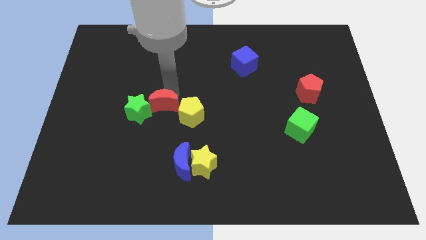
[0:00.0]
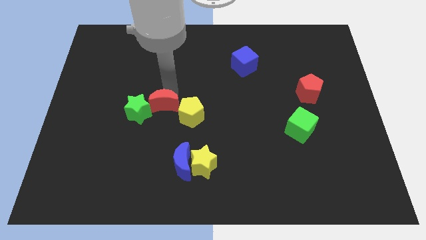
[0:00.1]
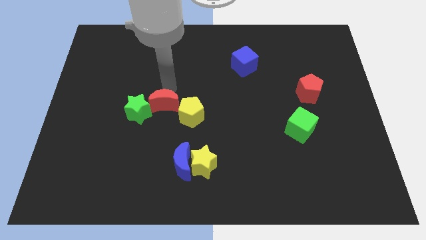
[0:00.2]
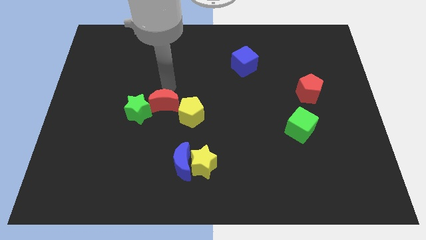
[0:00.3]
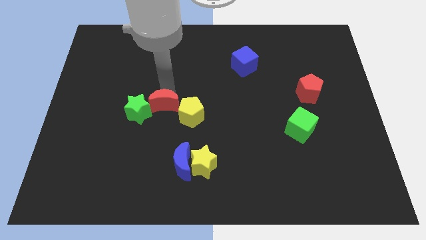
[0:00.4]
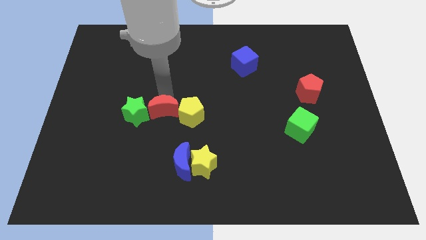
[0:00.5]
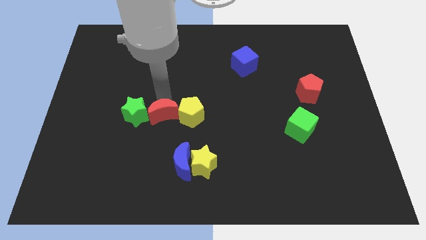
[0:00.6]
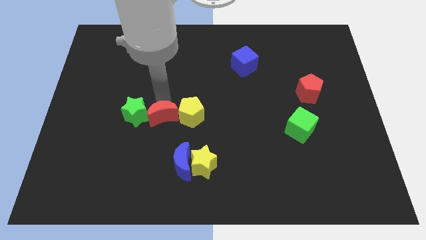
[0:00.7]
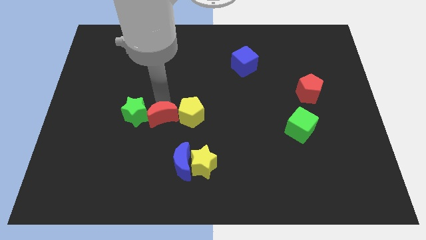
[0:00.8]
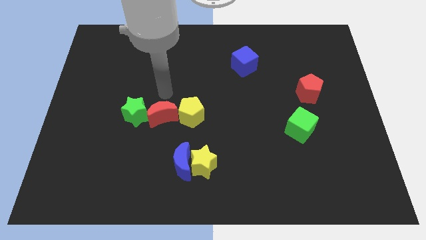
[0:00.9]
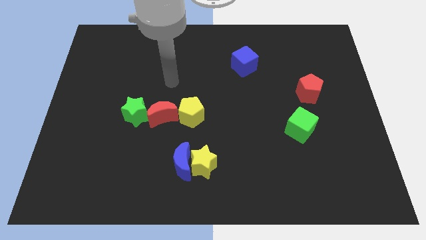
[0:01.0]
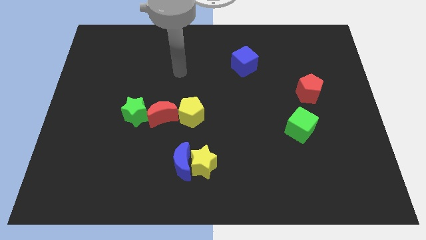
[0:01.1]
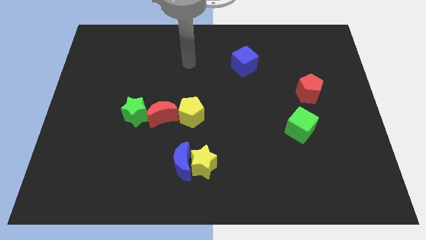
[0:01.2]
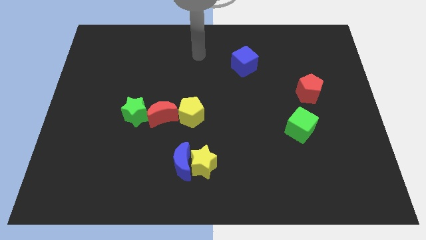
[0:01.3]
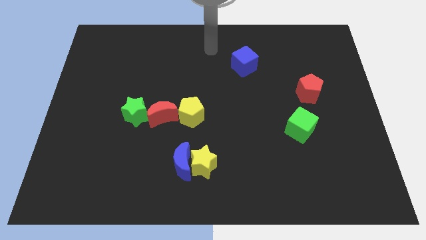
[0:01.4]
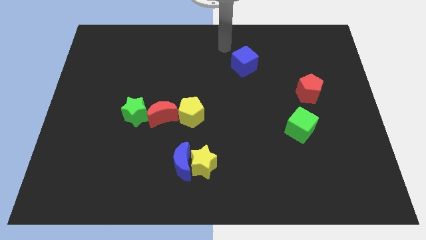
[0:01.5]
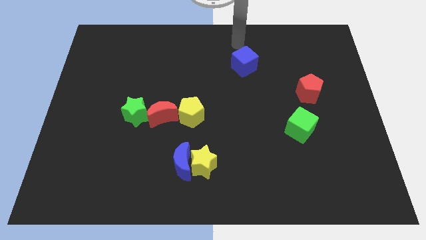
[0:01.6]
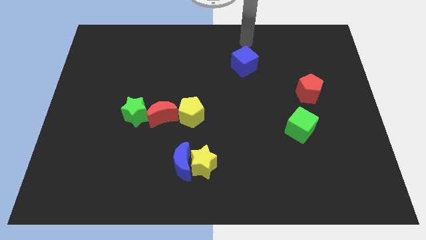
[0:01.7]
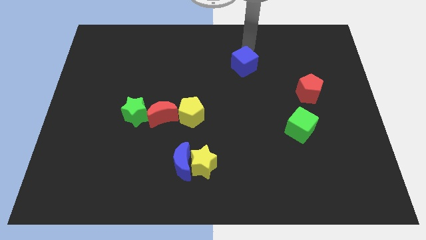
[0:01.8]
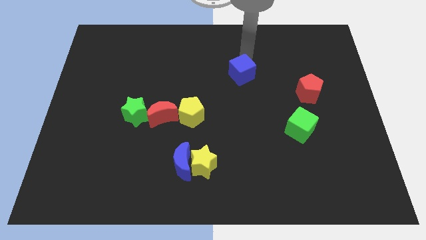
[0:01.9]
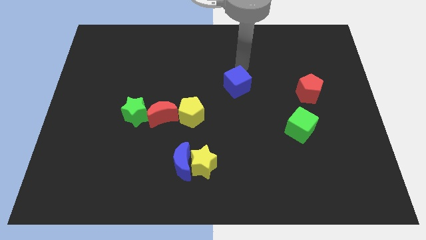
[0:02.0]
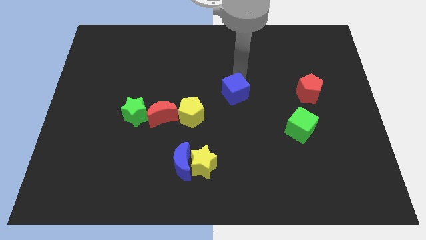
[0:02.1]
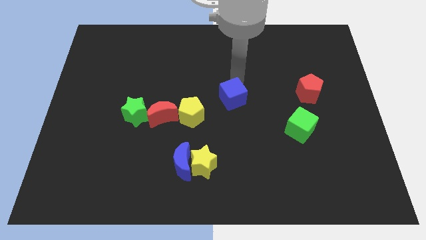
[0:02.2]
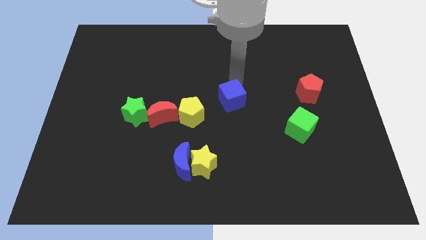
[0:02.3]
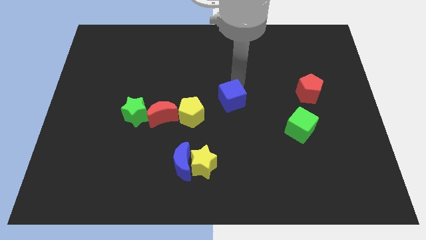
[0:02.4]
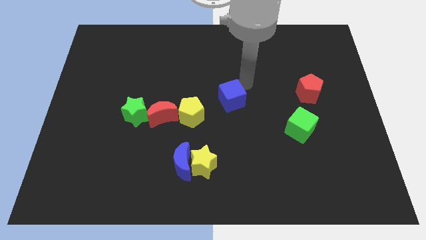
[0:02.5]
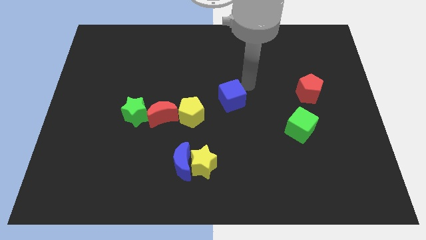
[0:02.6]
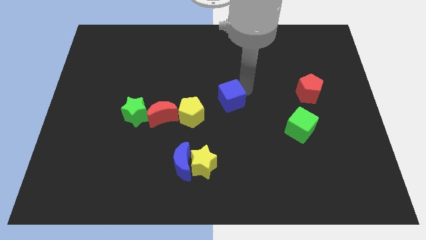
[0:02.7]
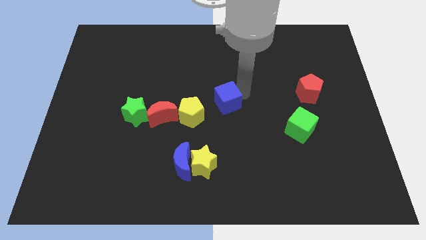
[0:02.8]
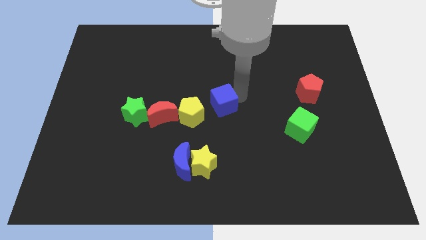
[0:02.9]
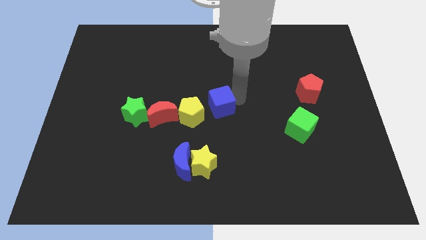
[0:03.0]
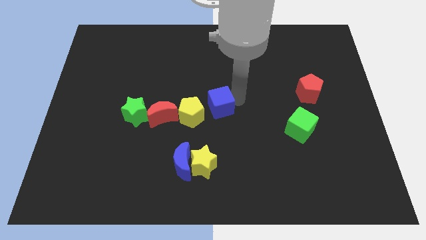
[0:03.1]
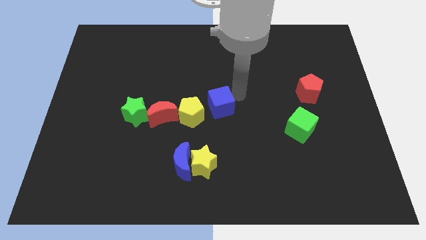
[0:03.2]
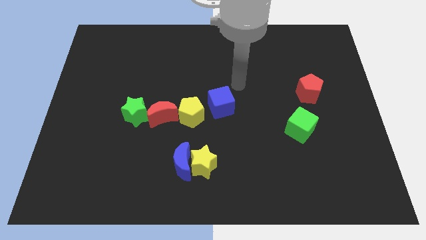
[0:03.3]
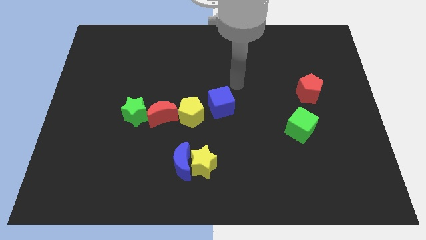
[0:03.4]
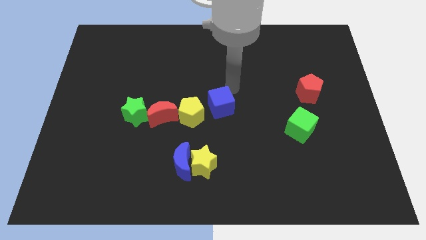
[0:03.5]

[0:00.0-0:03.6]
place blue cube beside yellow pentagon

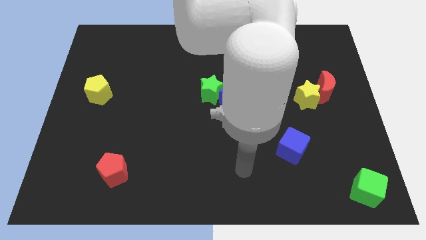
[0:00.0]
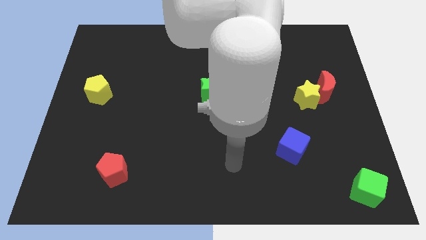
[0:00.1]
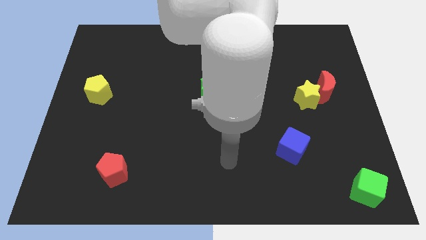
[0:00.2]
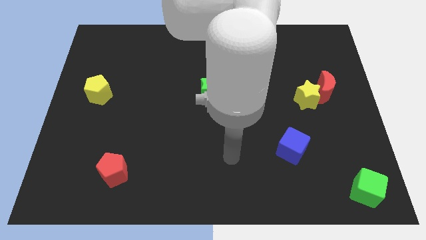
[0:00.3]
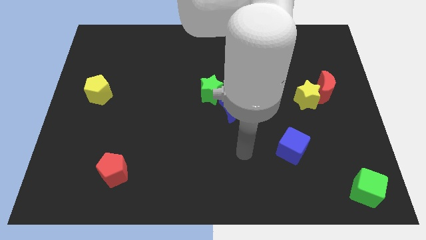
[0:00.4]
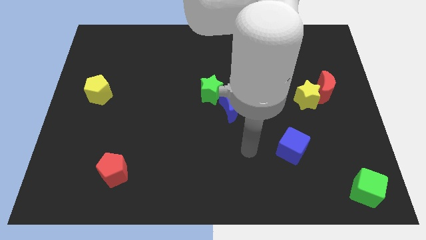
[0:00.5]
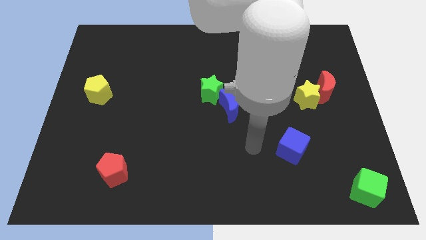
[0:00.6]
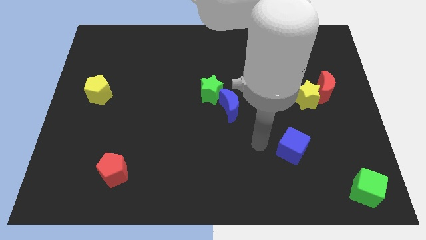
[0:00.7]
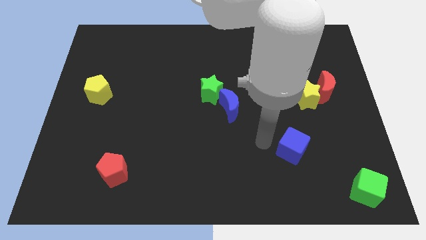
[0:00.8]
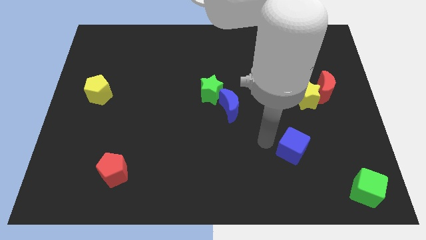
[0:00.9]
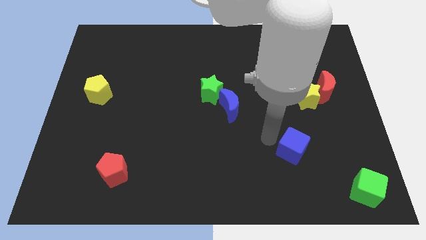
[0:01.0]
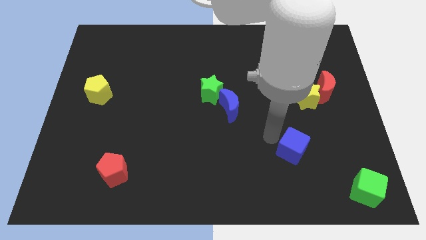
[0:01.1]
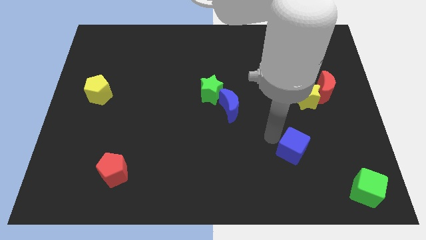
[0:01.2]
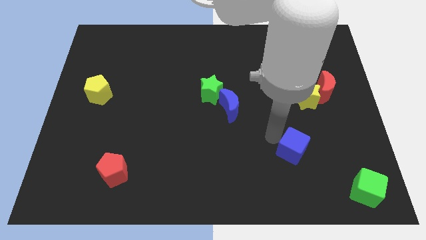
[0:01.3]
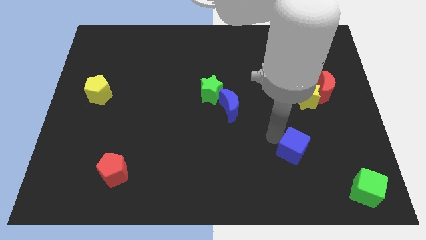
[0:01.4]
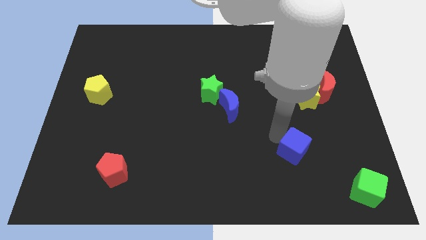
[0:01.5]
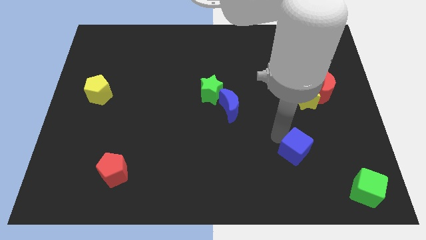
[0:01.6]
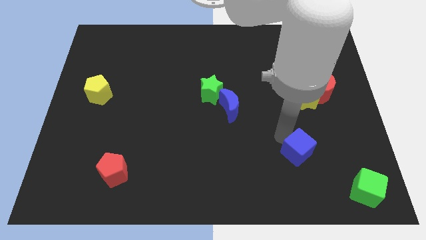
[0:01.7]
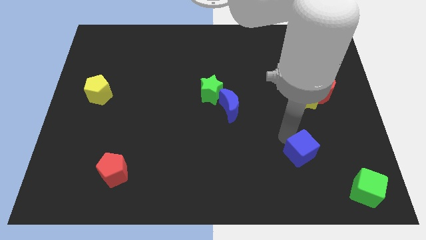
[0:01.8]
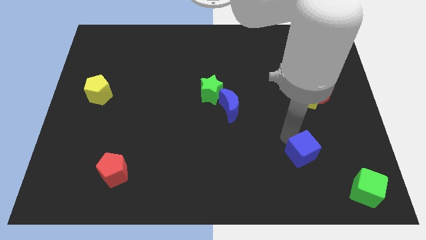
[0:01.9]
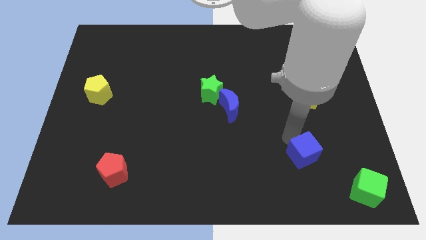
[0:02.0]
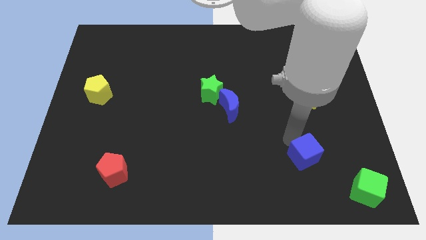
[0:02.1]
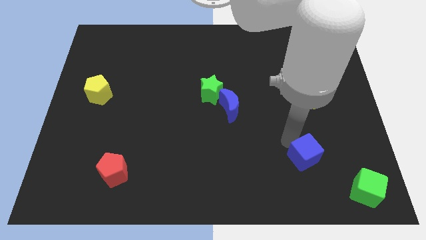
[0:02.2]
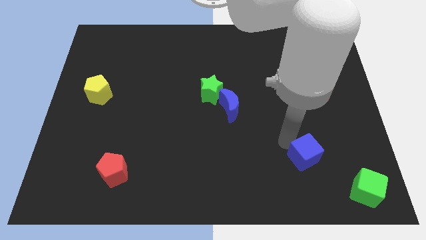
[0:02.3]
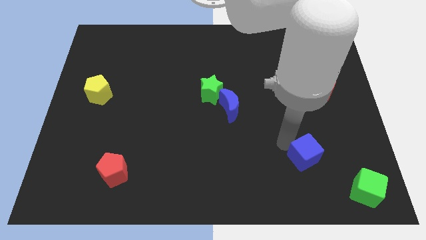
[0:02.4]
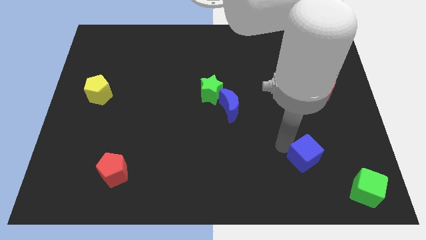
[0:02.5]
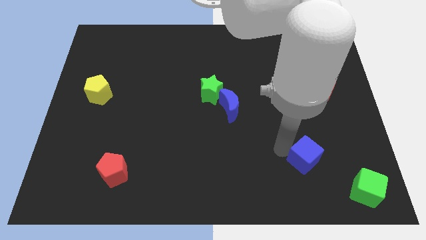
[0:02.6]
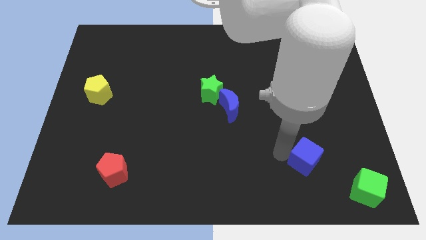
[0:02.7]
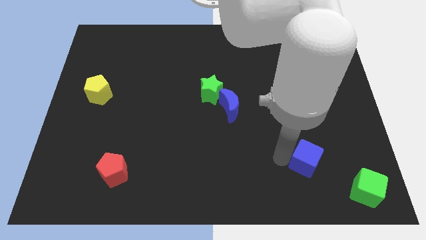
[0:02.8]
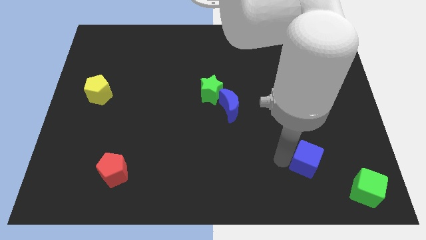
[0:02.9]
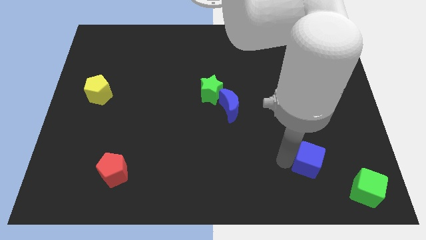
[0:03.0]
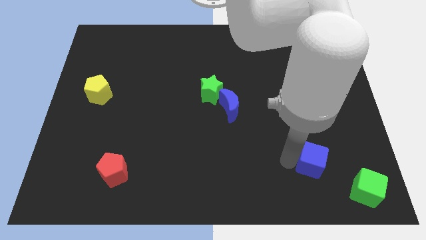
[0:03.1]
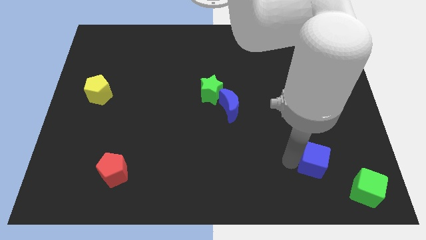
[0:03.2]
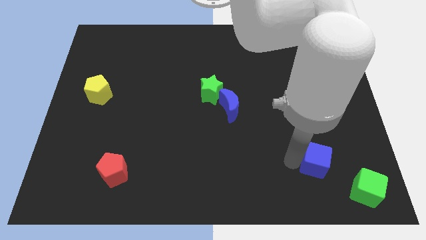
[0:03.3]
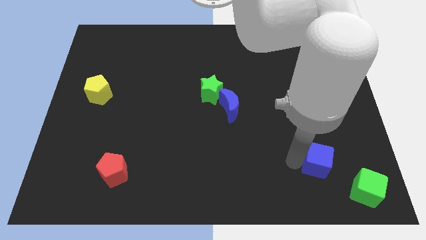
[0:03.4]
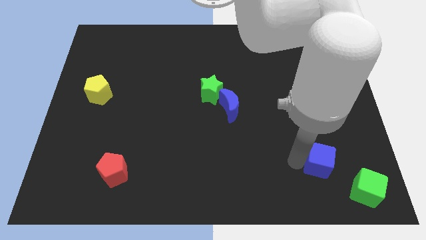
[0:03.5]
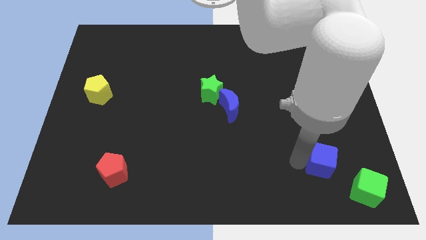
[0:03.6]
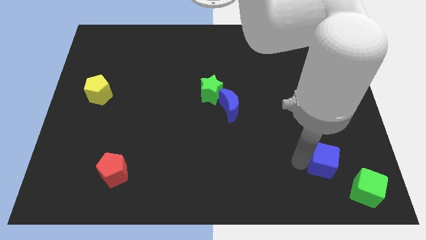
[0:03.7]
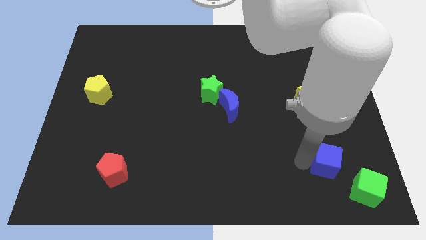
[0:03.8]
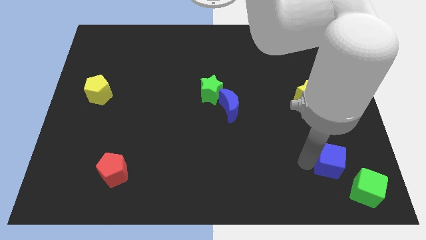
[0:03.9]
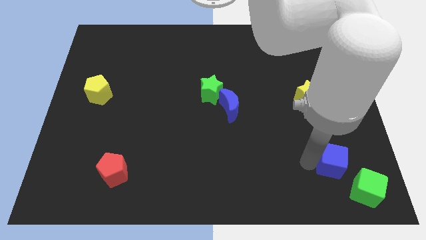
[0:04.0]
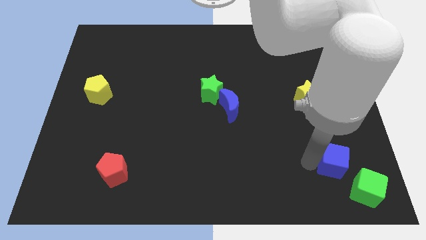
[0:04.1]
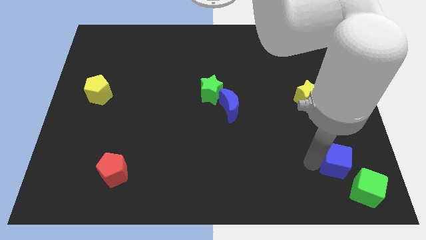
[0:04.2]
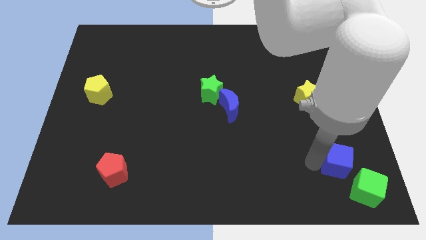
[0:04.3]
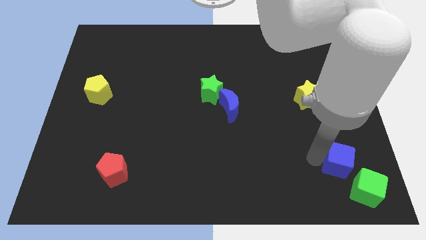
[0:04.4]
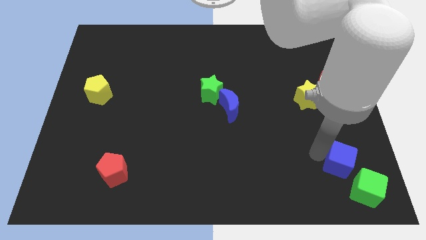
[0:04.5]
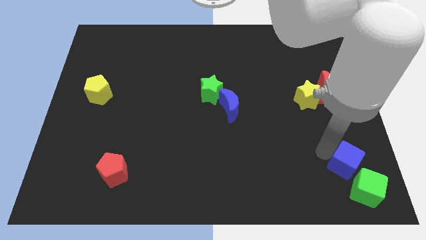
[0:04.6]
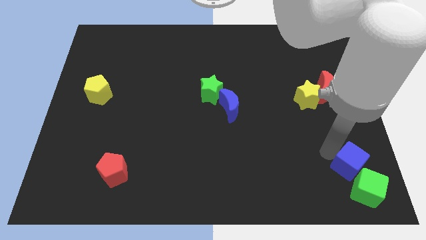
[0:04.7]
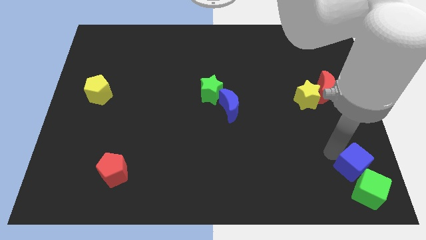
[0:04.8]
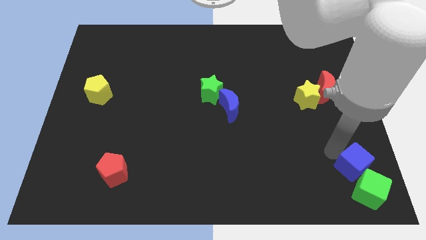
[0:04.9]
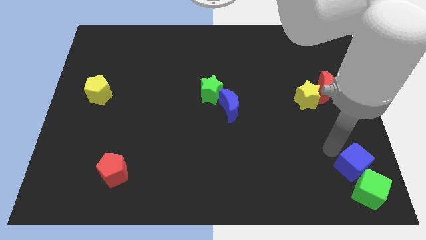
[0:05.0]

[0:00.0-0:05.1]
move blue cube into green cube

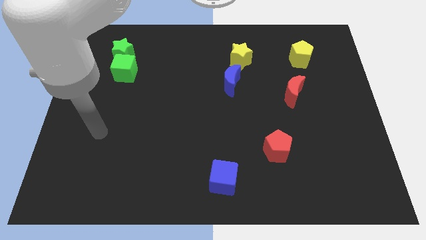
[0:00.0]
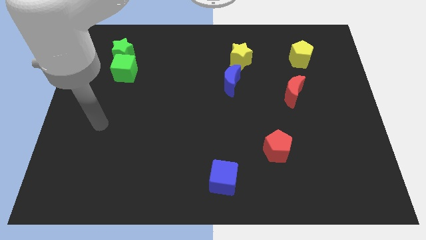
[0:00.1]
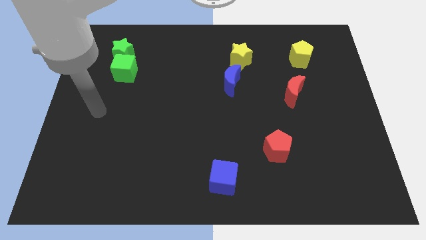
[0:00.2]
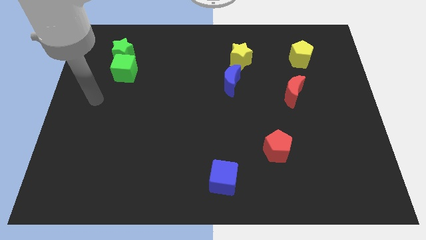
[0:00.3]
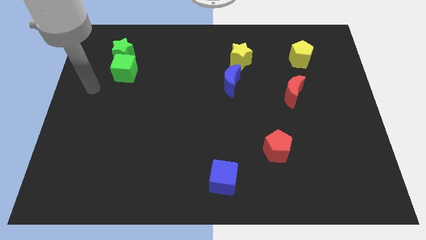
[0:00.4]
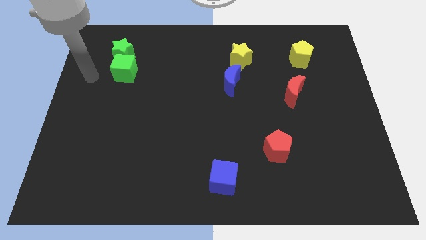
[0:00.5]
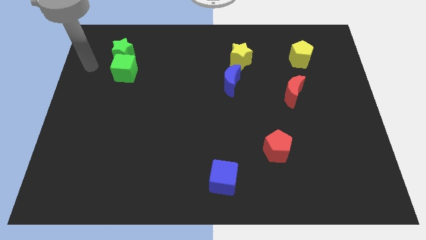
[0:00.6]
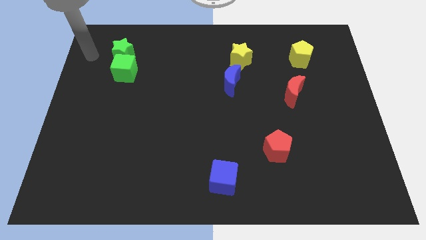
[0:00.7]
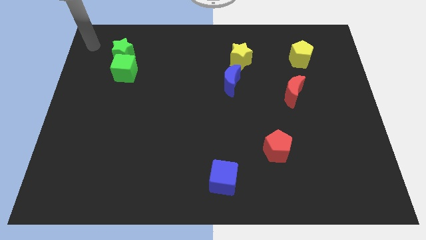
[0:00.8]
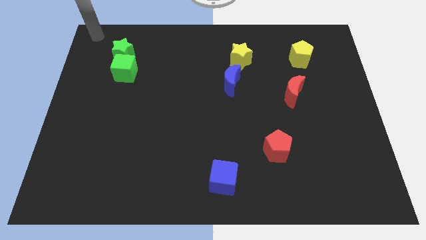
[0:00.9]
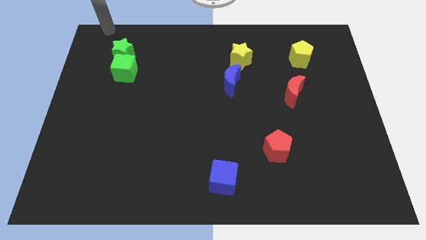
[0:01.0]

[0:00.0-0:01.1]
move your hand to the top side
